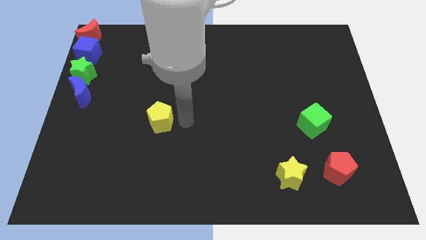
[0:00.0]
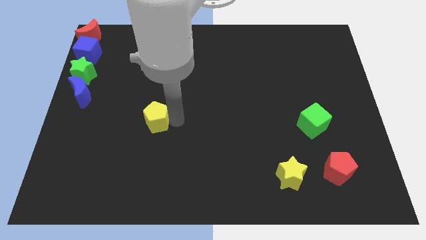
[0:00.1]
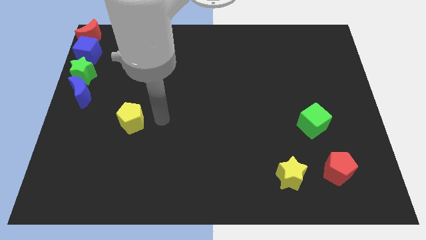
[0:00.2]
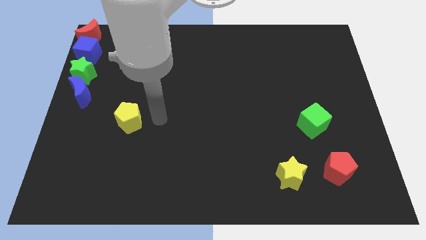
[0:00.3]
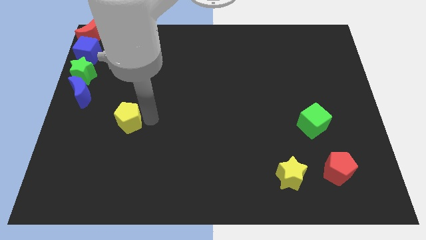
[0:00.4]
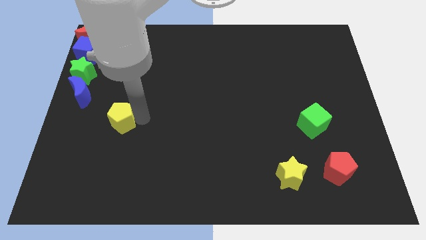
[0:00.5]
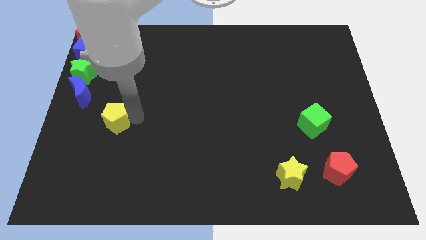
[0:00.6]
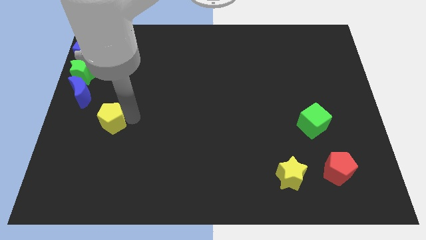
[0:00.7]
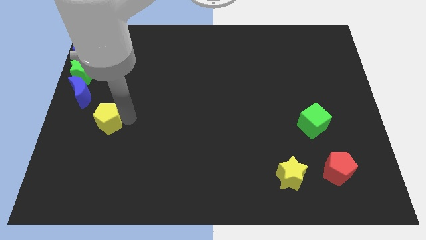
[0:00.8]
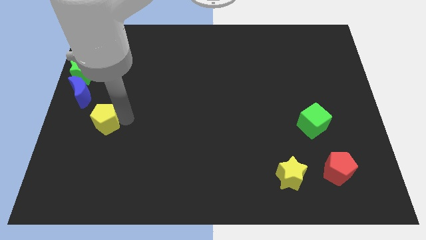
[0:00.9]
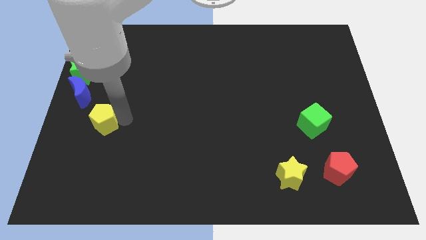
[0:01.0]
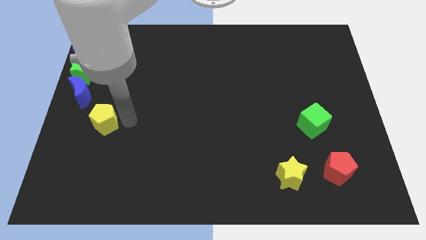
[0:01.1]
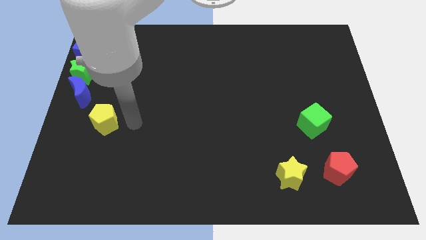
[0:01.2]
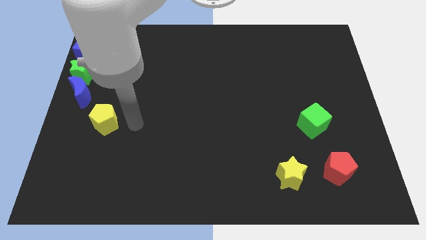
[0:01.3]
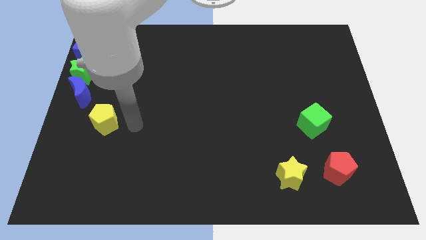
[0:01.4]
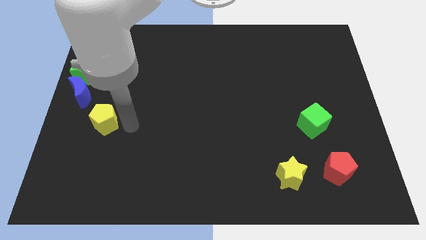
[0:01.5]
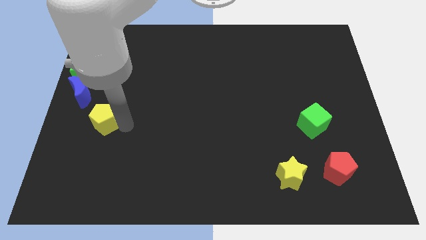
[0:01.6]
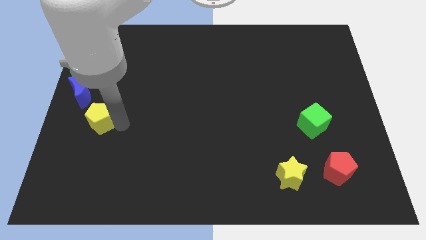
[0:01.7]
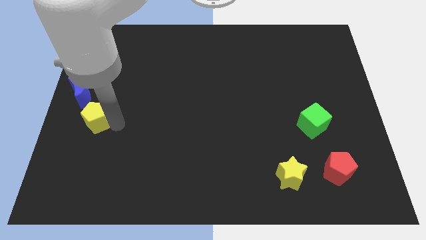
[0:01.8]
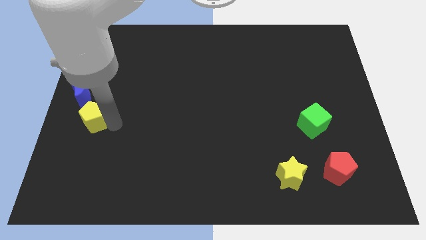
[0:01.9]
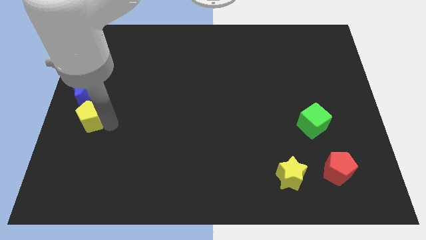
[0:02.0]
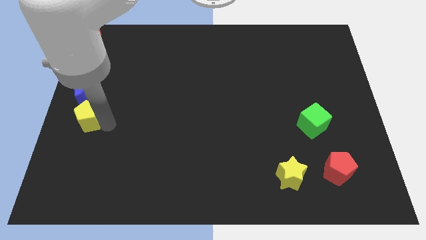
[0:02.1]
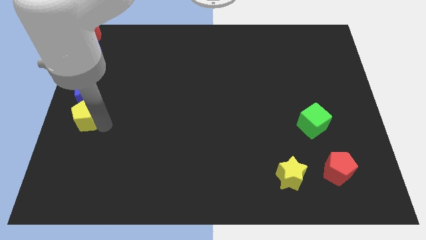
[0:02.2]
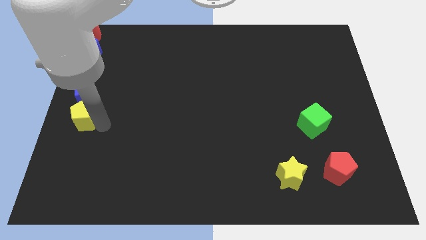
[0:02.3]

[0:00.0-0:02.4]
move yellow pentagon towards the blue crescent

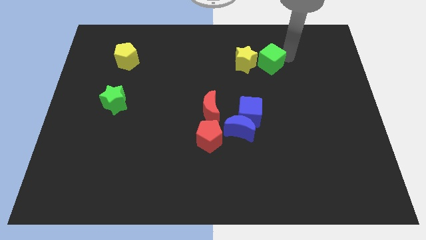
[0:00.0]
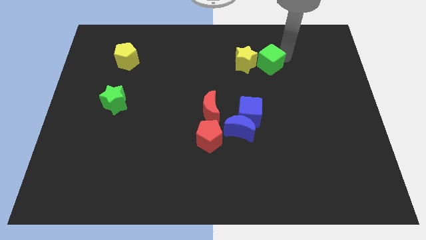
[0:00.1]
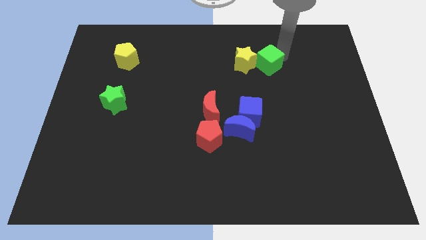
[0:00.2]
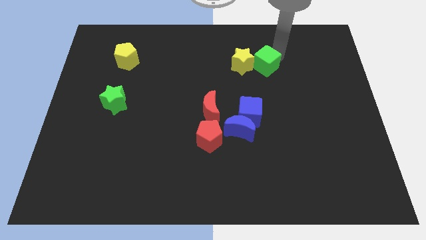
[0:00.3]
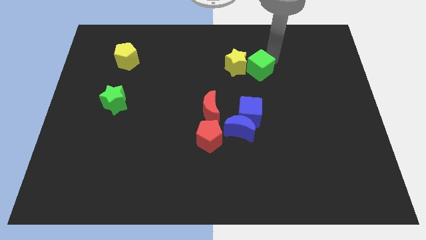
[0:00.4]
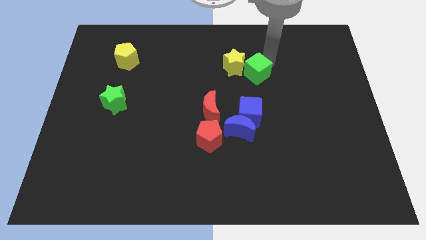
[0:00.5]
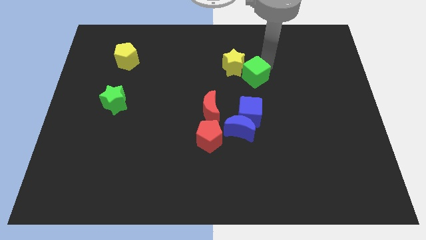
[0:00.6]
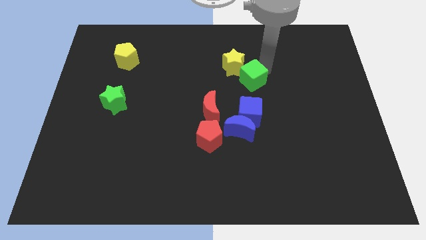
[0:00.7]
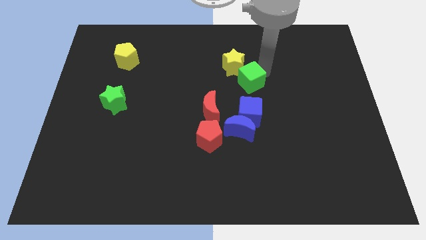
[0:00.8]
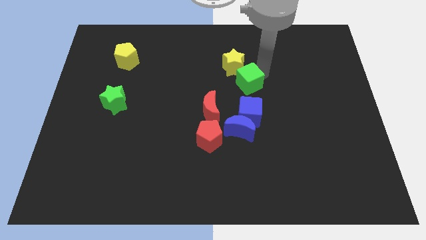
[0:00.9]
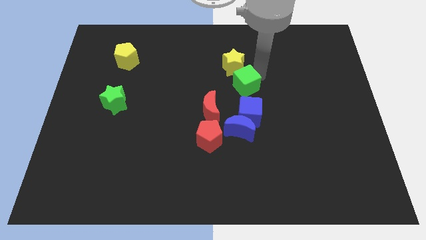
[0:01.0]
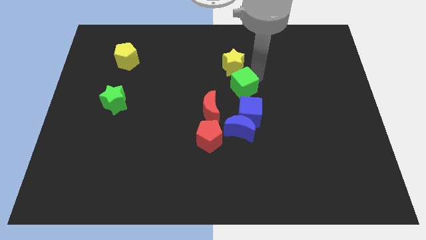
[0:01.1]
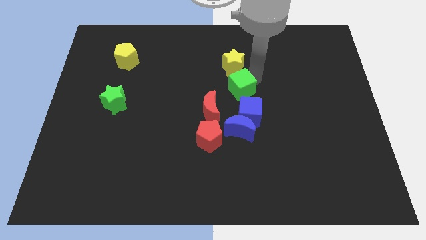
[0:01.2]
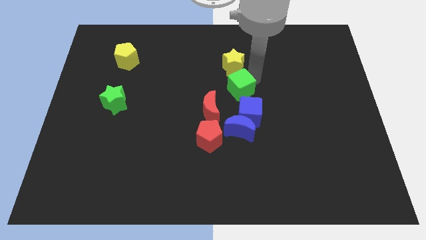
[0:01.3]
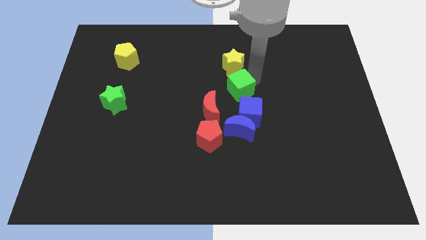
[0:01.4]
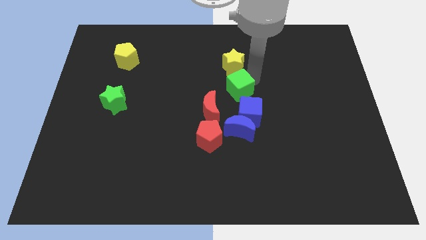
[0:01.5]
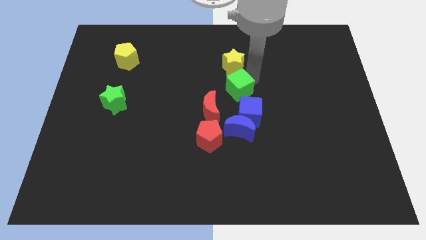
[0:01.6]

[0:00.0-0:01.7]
push the green cube towards the center

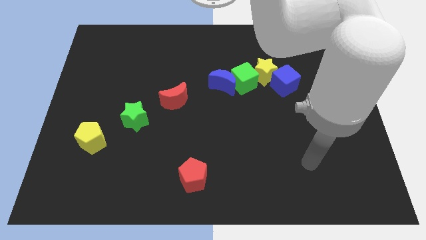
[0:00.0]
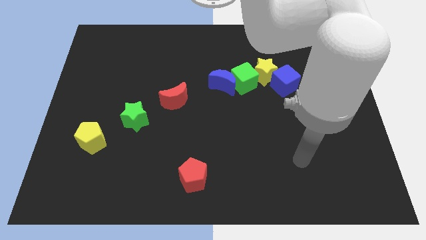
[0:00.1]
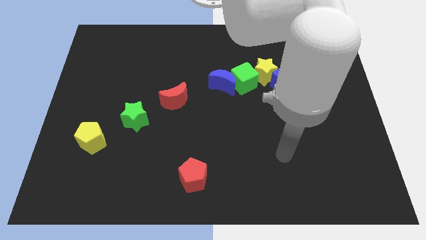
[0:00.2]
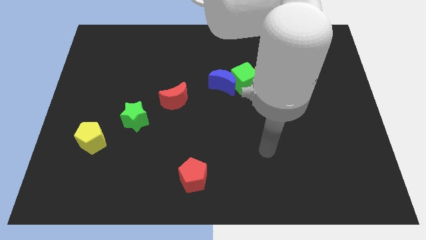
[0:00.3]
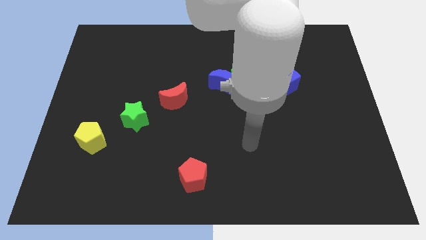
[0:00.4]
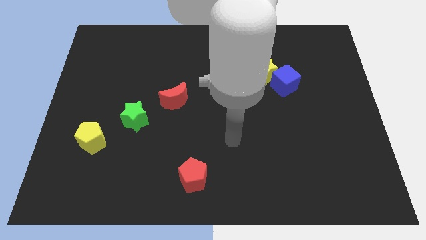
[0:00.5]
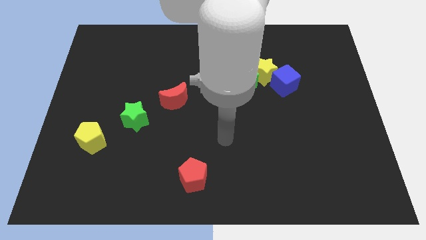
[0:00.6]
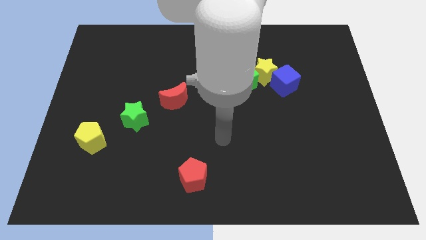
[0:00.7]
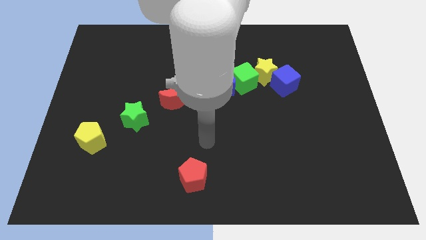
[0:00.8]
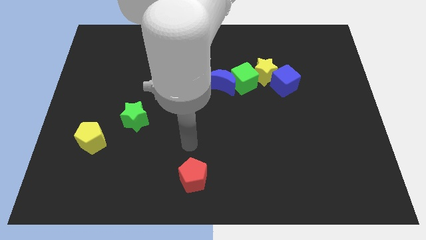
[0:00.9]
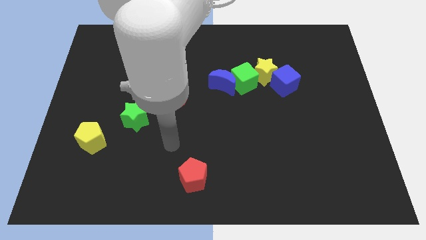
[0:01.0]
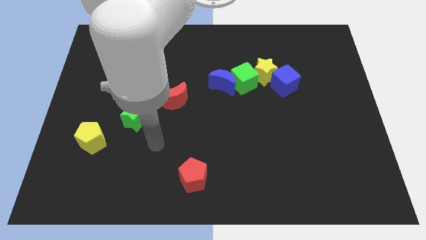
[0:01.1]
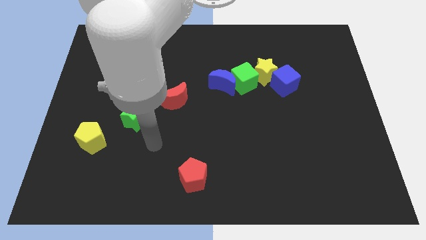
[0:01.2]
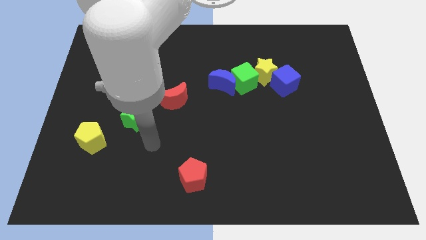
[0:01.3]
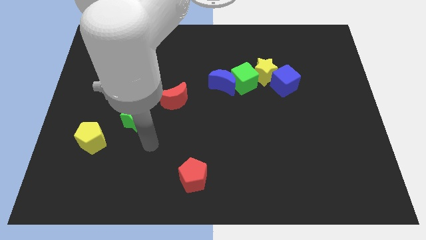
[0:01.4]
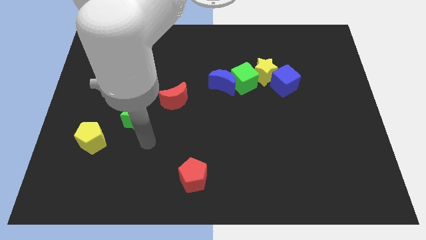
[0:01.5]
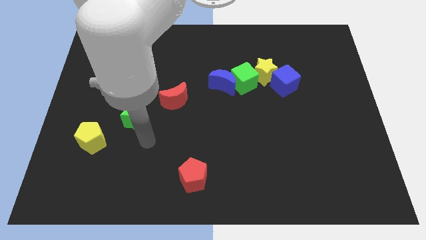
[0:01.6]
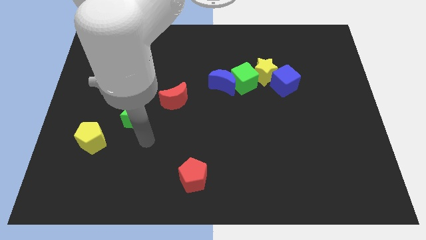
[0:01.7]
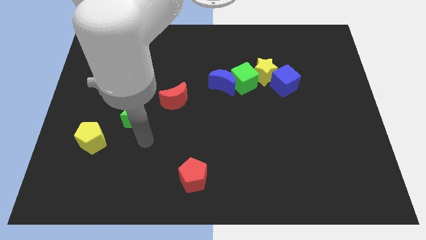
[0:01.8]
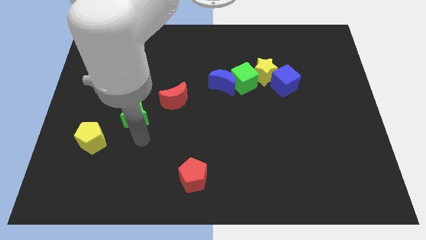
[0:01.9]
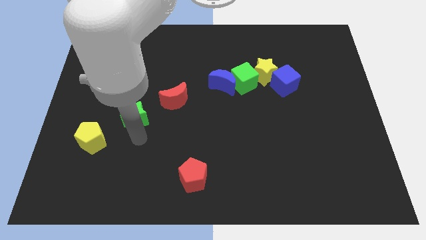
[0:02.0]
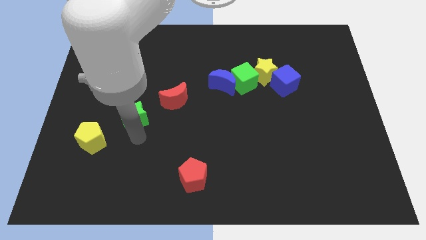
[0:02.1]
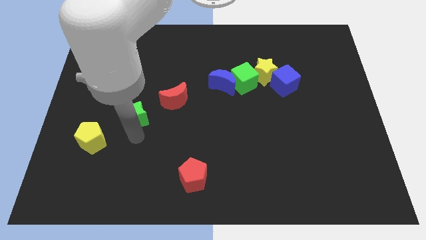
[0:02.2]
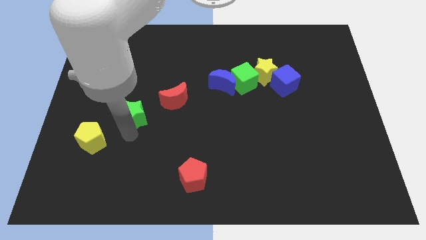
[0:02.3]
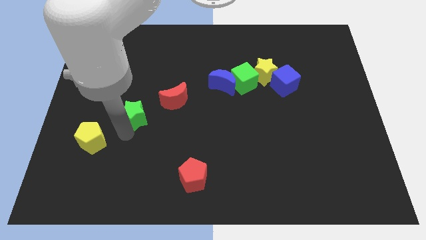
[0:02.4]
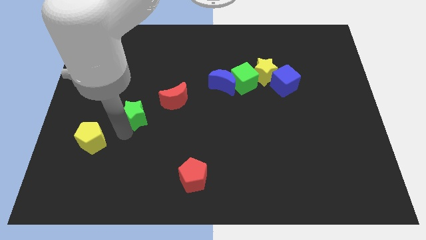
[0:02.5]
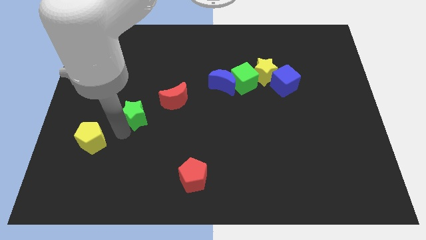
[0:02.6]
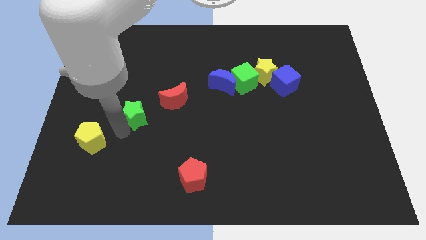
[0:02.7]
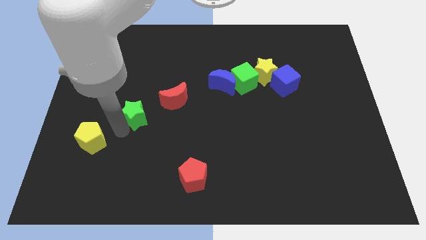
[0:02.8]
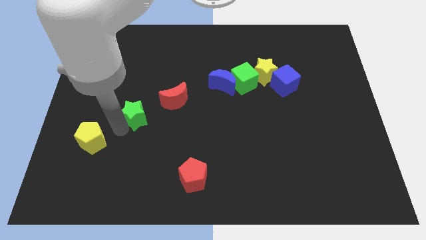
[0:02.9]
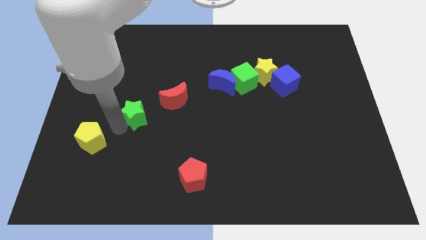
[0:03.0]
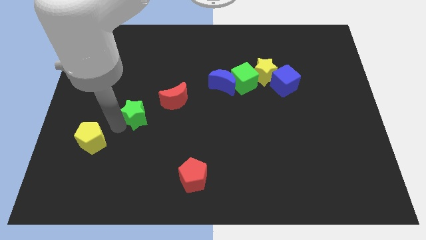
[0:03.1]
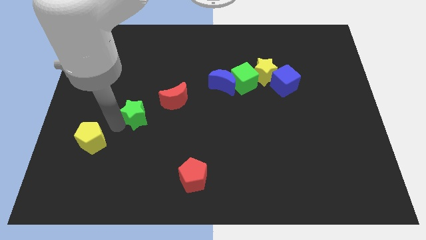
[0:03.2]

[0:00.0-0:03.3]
slightly move the green star up

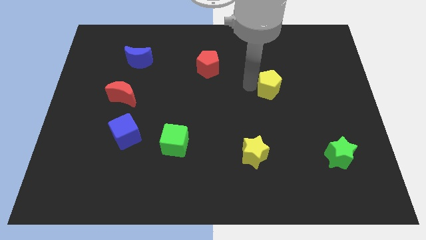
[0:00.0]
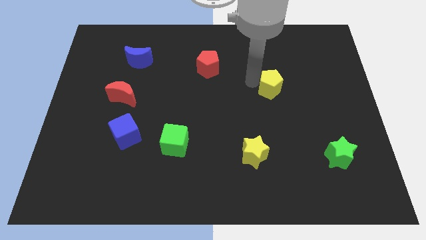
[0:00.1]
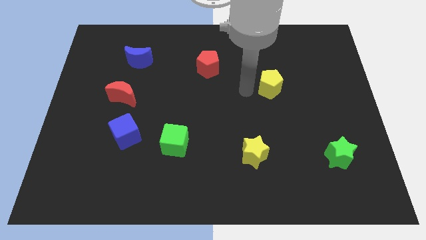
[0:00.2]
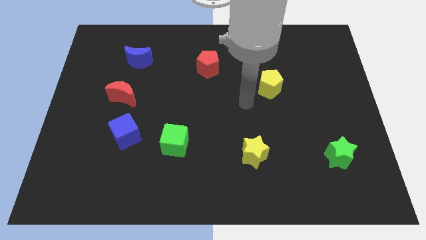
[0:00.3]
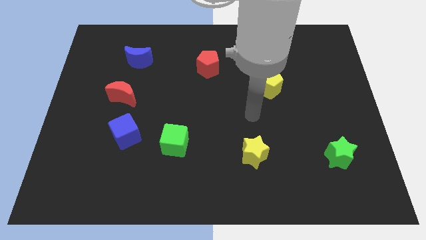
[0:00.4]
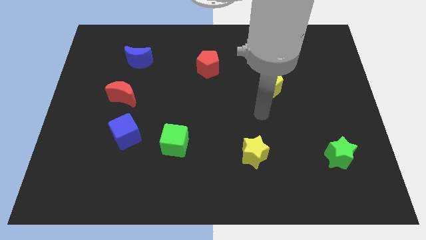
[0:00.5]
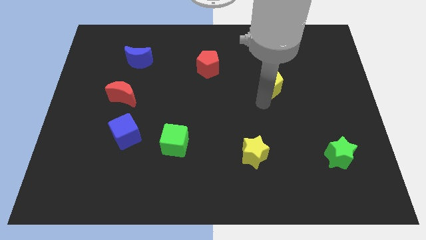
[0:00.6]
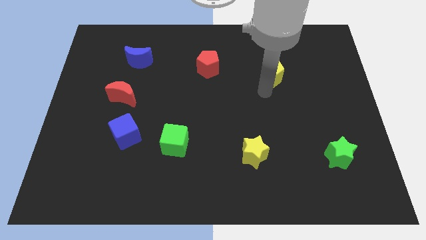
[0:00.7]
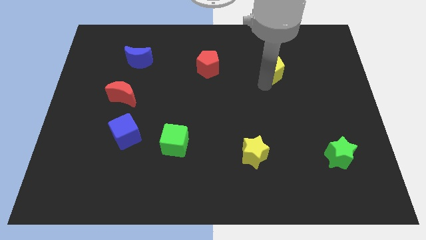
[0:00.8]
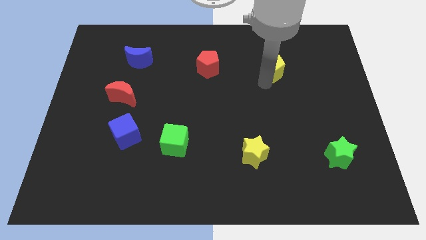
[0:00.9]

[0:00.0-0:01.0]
move yellow pentagon parallel right to red pentagon

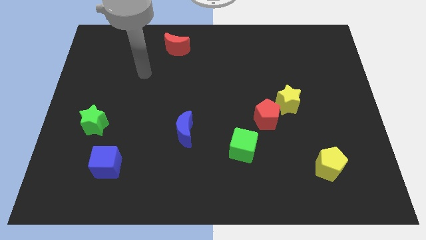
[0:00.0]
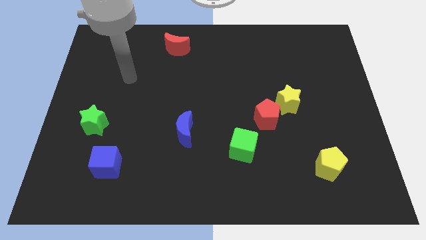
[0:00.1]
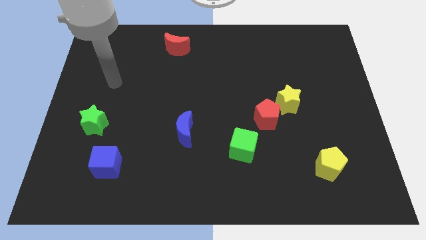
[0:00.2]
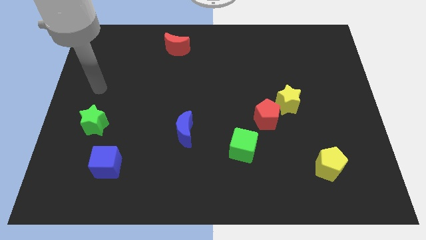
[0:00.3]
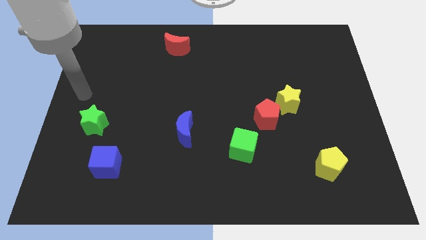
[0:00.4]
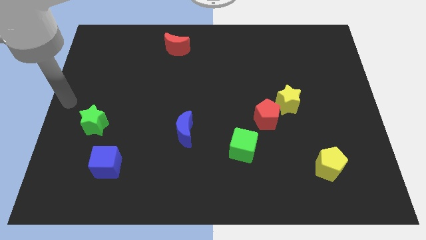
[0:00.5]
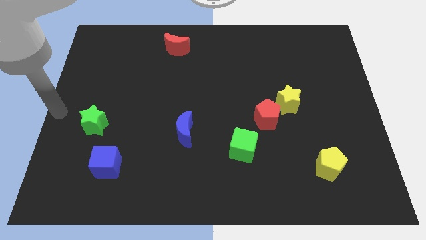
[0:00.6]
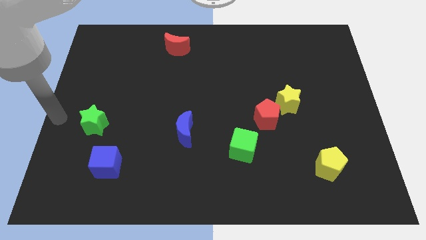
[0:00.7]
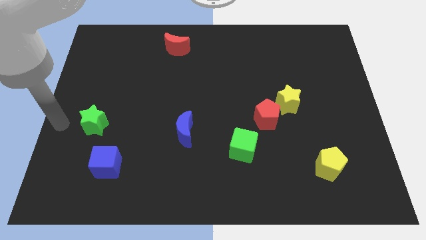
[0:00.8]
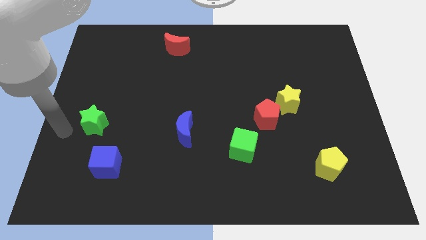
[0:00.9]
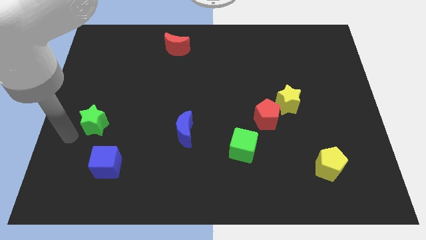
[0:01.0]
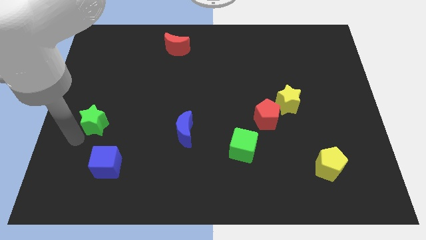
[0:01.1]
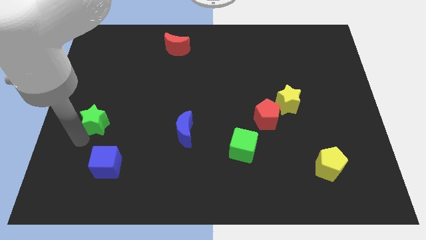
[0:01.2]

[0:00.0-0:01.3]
place arm on the bottom of green star
